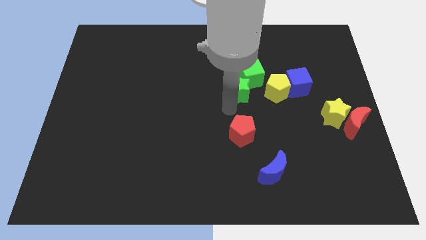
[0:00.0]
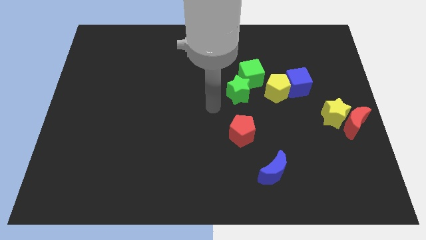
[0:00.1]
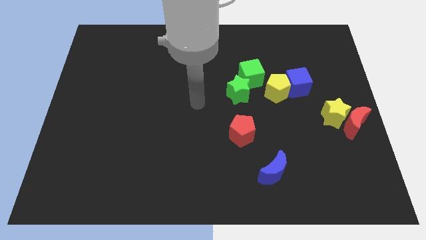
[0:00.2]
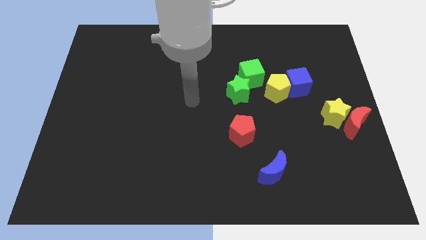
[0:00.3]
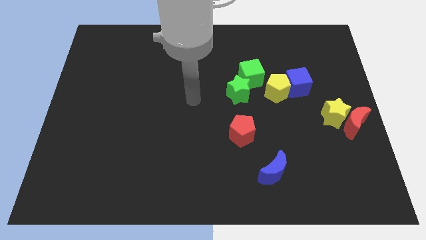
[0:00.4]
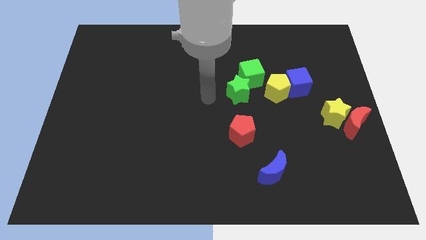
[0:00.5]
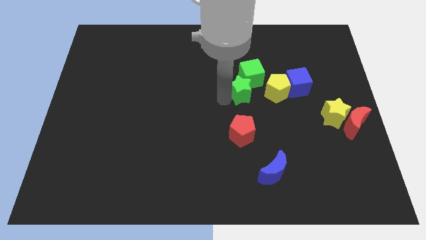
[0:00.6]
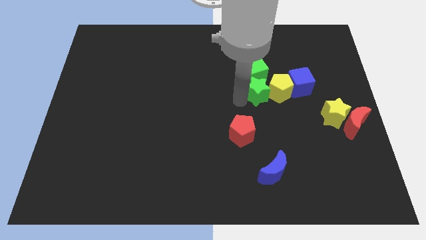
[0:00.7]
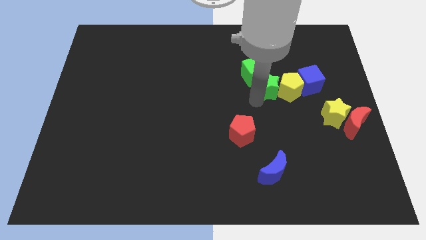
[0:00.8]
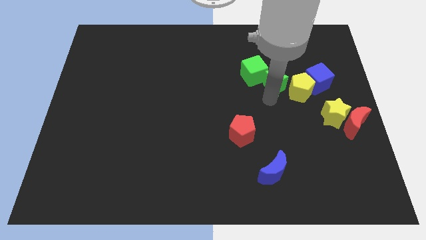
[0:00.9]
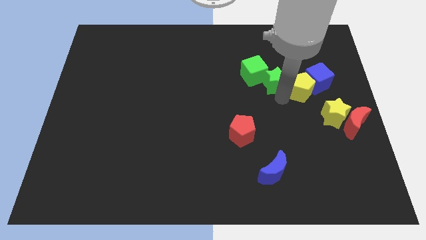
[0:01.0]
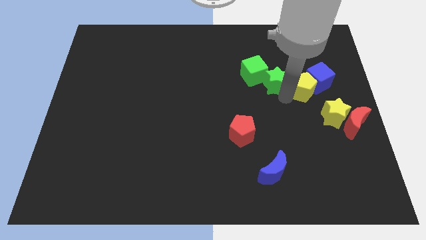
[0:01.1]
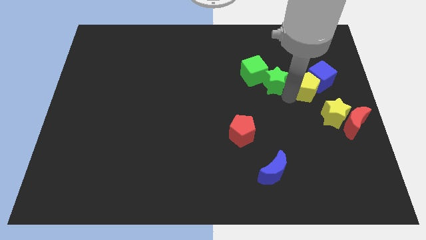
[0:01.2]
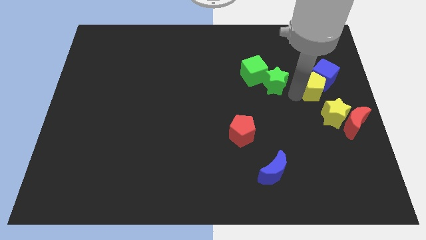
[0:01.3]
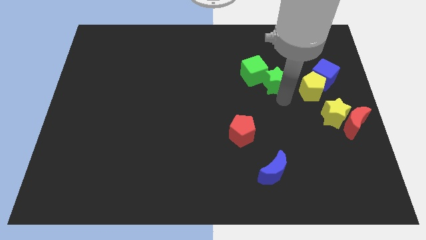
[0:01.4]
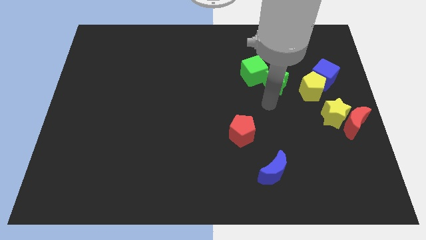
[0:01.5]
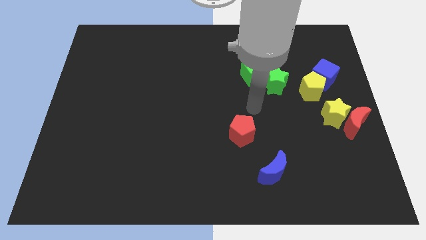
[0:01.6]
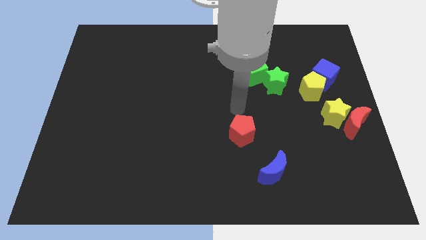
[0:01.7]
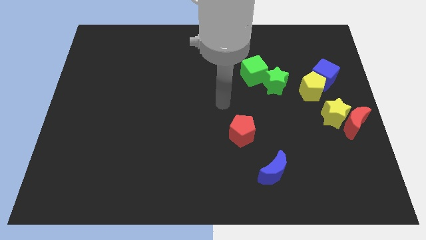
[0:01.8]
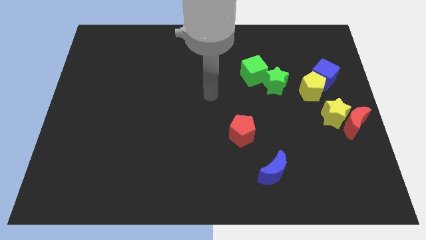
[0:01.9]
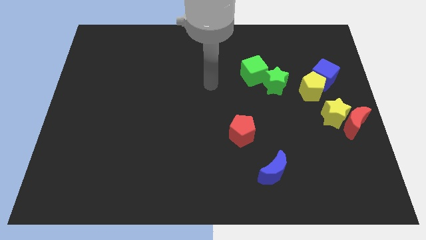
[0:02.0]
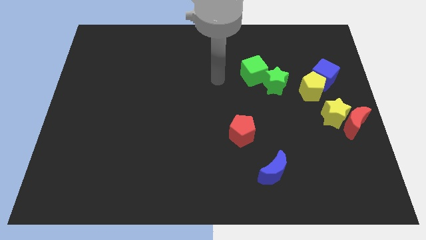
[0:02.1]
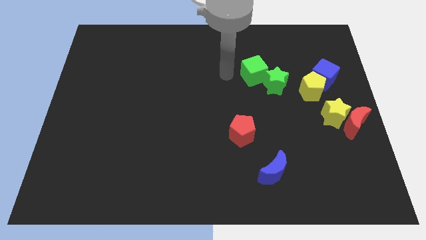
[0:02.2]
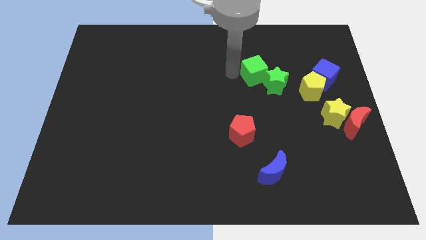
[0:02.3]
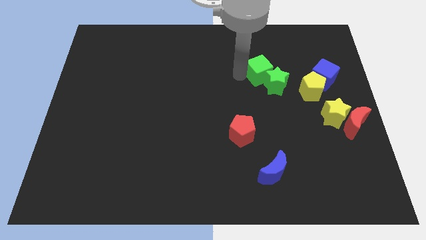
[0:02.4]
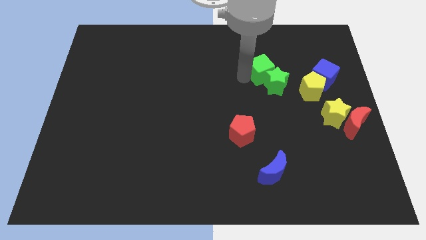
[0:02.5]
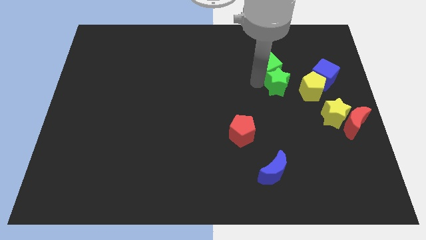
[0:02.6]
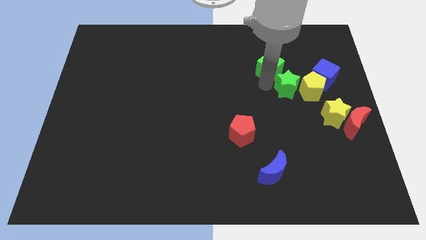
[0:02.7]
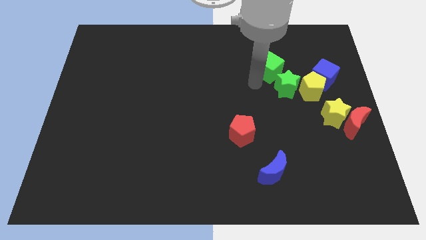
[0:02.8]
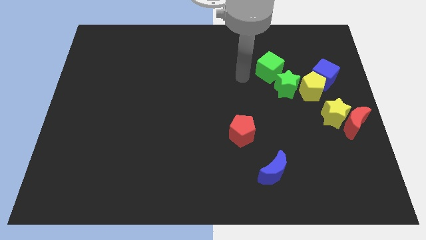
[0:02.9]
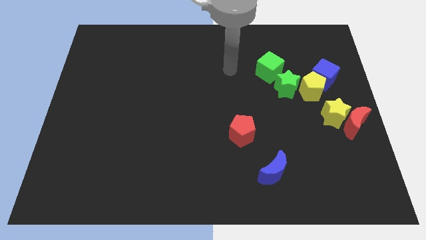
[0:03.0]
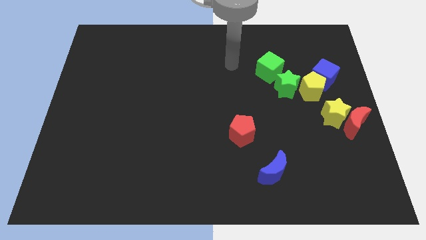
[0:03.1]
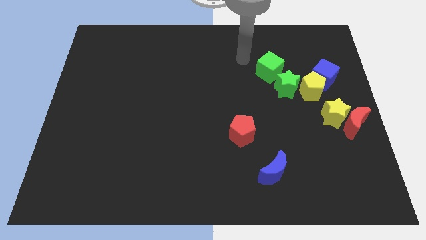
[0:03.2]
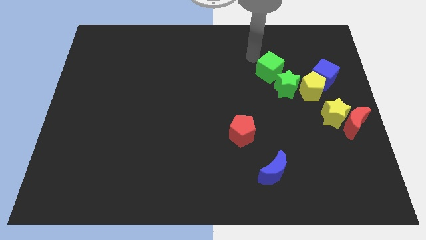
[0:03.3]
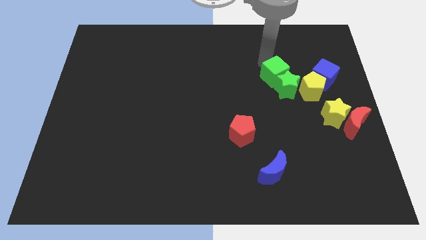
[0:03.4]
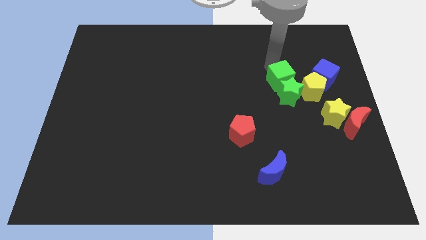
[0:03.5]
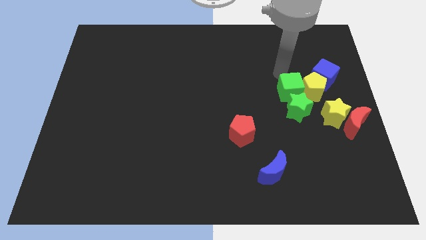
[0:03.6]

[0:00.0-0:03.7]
push the green blocks into the group of objects

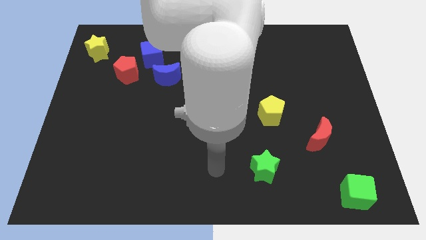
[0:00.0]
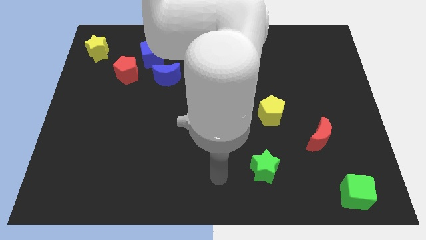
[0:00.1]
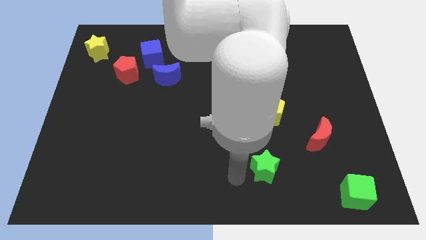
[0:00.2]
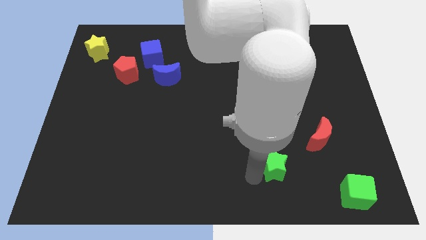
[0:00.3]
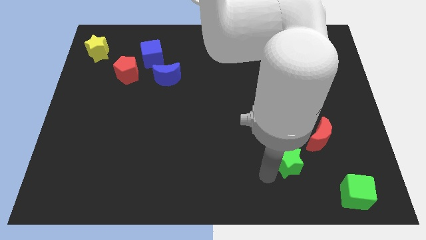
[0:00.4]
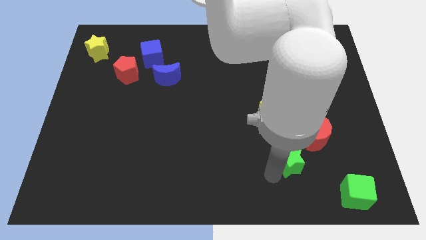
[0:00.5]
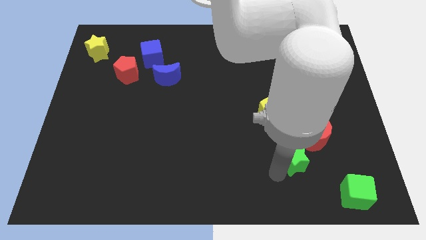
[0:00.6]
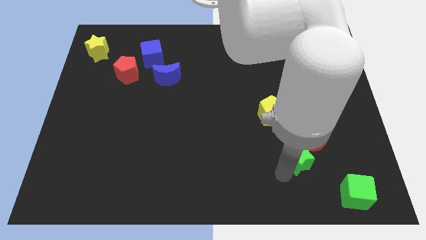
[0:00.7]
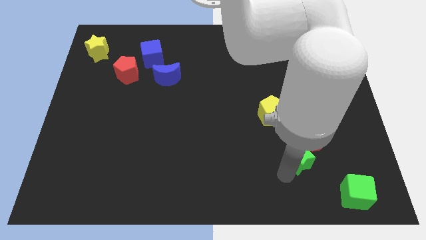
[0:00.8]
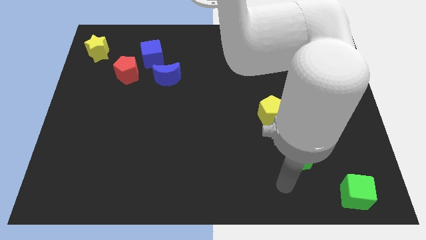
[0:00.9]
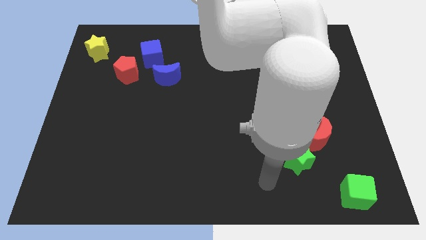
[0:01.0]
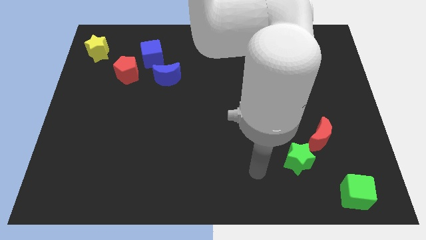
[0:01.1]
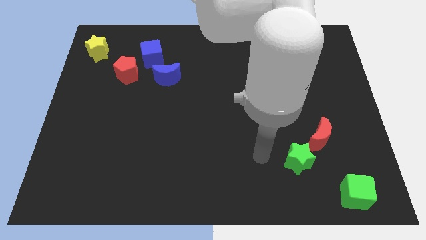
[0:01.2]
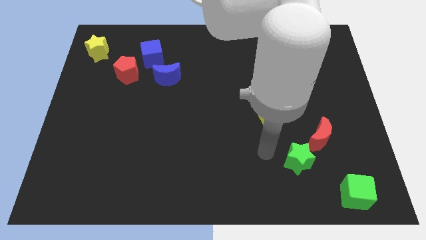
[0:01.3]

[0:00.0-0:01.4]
place green star to the bottom left of red moon

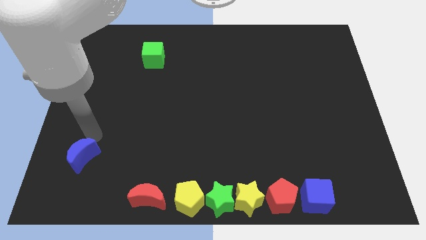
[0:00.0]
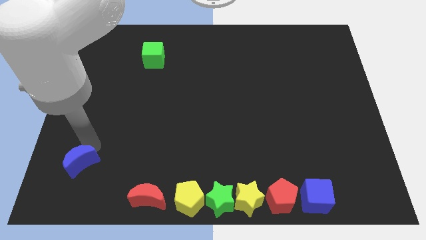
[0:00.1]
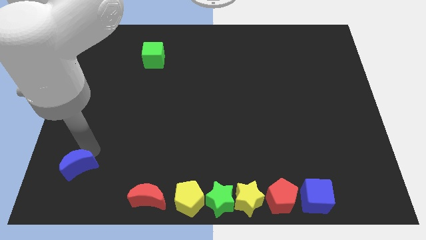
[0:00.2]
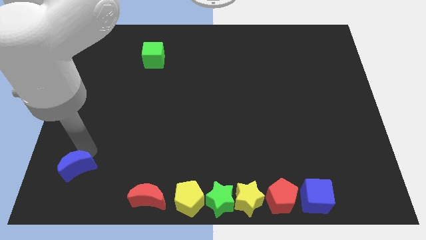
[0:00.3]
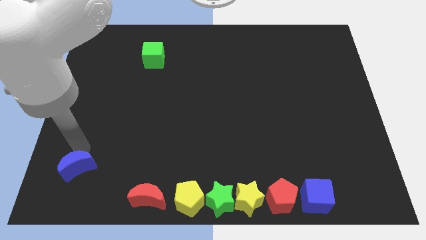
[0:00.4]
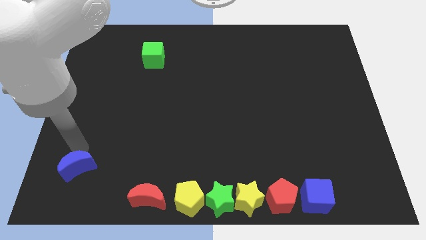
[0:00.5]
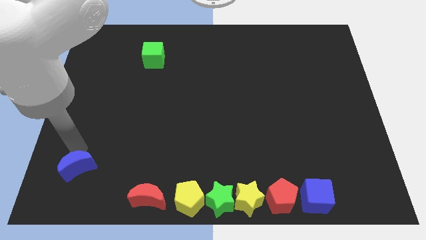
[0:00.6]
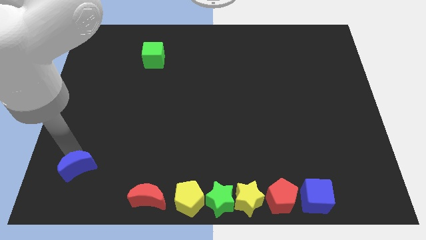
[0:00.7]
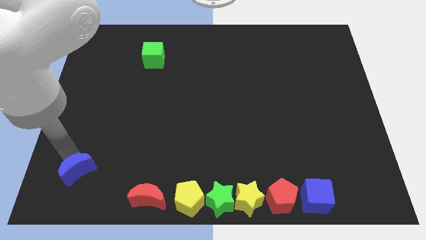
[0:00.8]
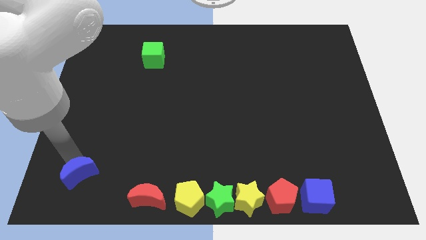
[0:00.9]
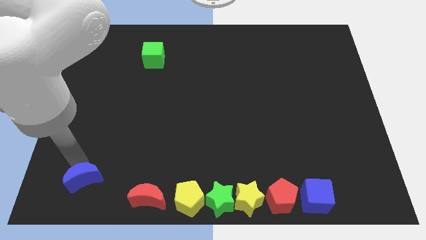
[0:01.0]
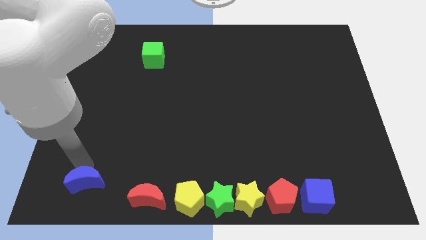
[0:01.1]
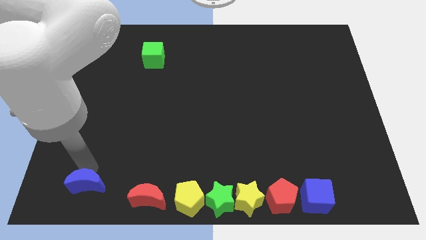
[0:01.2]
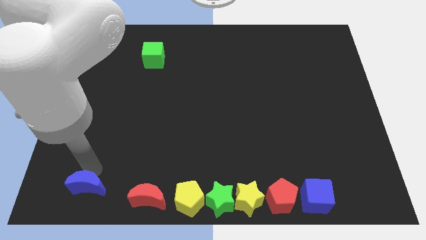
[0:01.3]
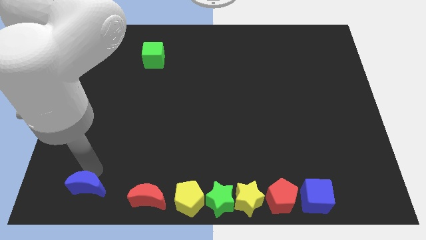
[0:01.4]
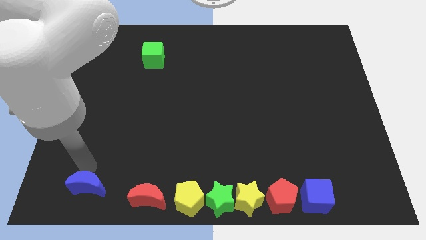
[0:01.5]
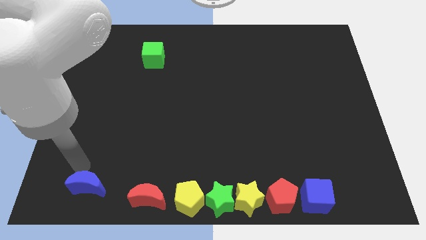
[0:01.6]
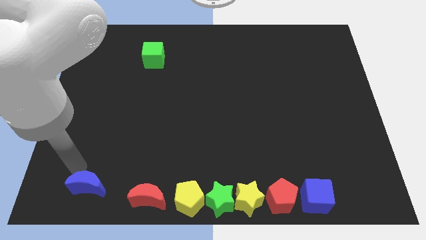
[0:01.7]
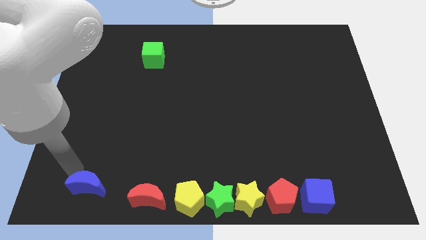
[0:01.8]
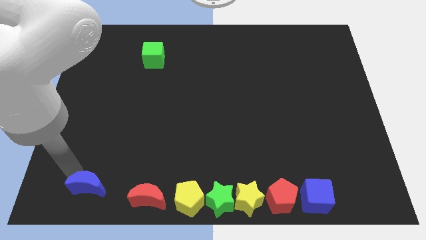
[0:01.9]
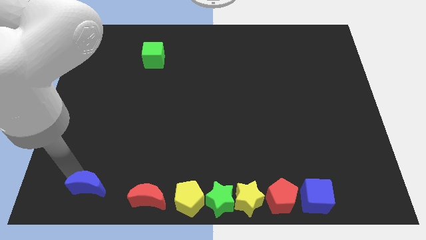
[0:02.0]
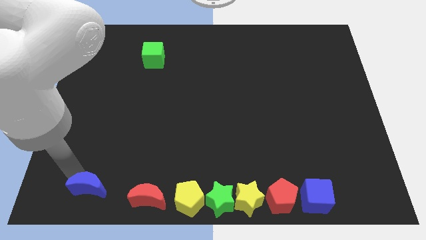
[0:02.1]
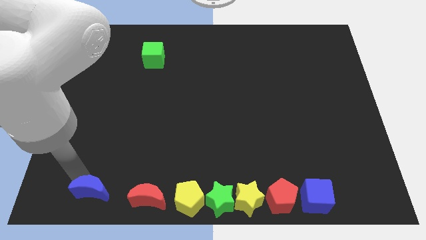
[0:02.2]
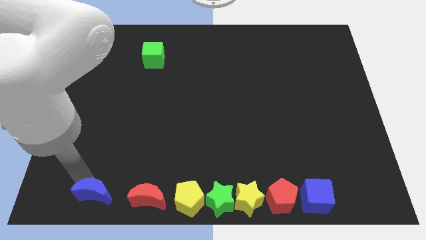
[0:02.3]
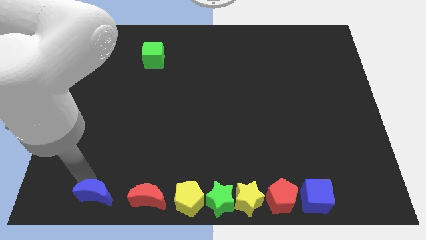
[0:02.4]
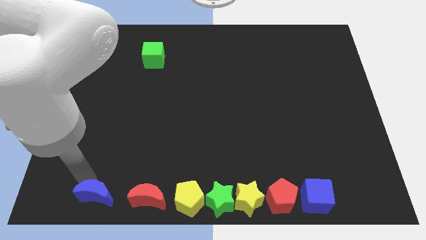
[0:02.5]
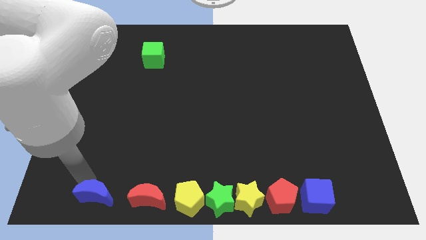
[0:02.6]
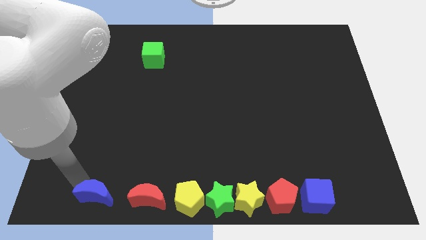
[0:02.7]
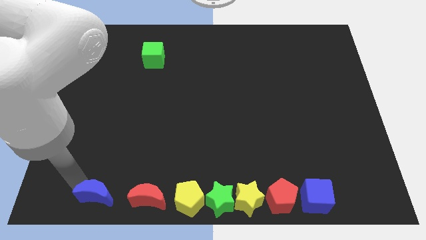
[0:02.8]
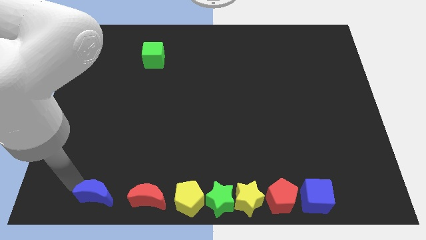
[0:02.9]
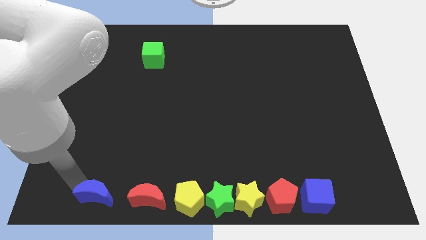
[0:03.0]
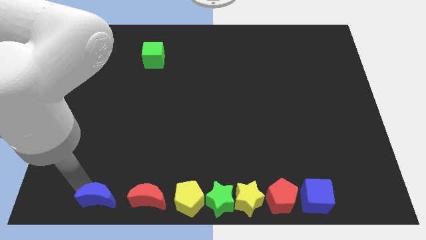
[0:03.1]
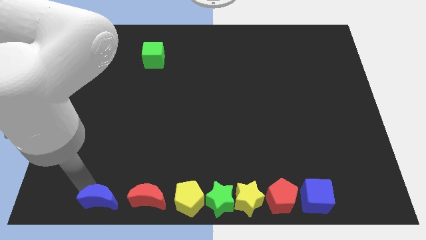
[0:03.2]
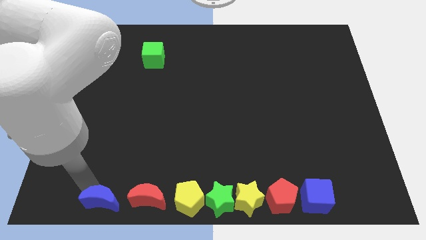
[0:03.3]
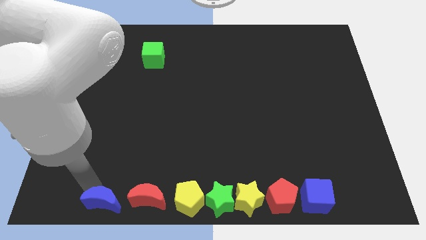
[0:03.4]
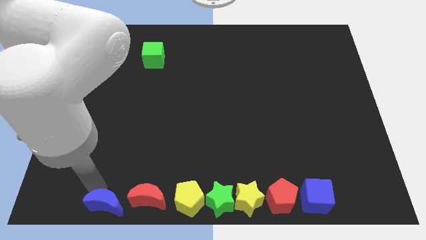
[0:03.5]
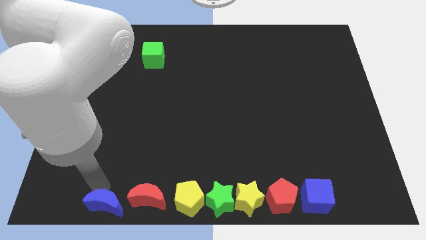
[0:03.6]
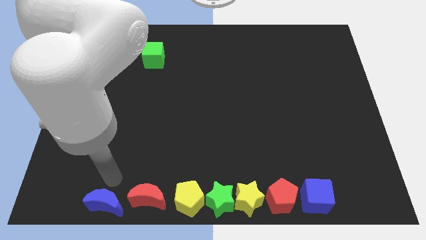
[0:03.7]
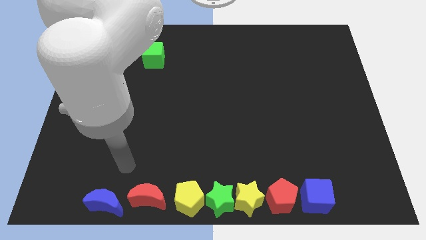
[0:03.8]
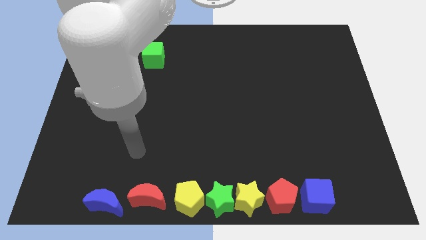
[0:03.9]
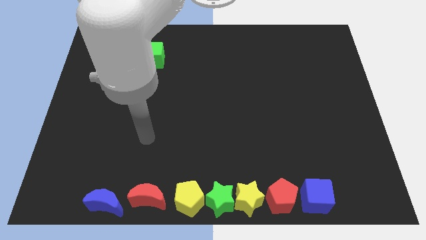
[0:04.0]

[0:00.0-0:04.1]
push the blue crescent to the left of the red crescent
